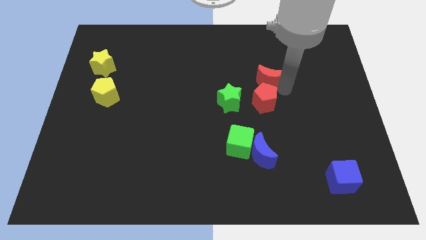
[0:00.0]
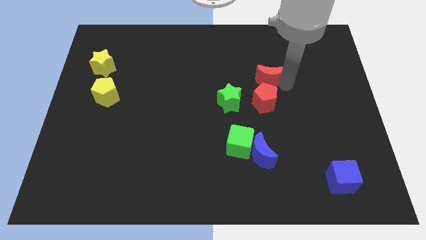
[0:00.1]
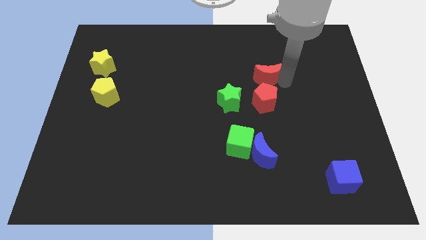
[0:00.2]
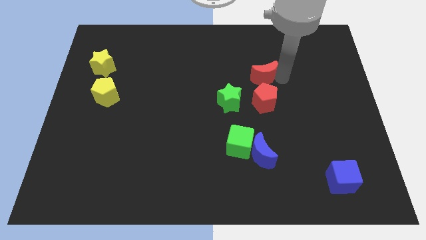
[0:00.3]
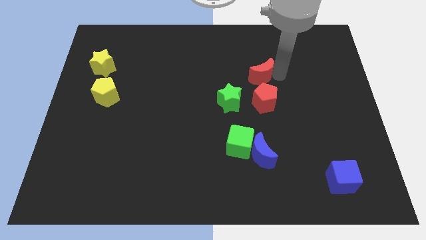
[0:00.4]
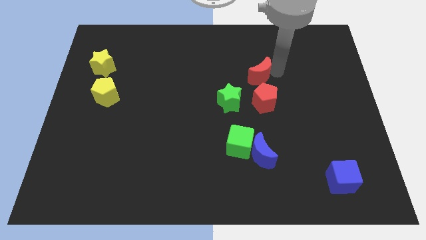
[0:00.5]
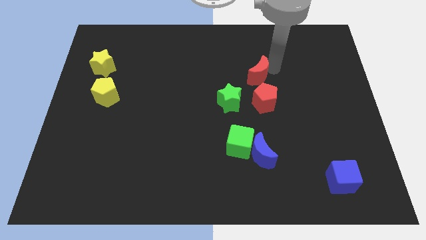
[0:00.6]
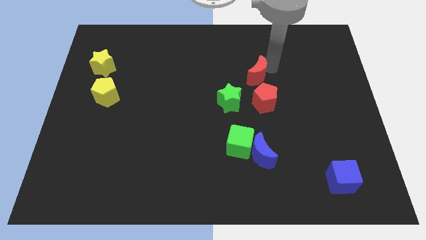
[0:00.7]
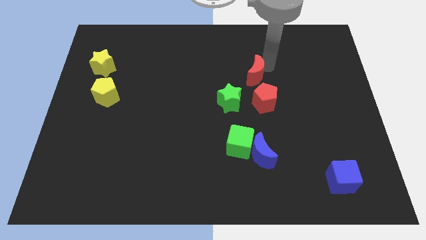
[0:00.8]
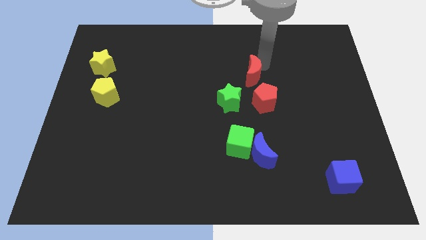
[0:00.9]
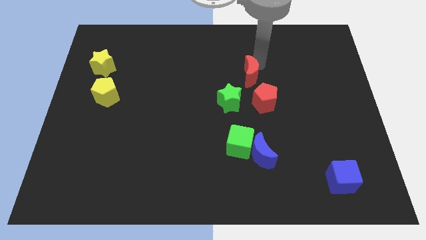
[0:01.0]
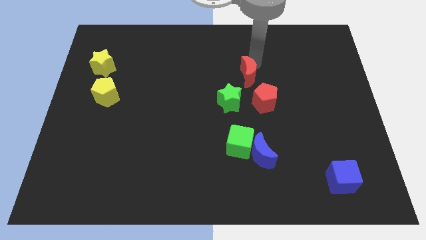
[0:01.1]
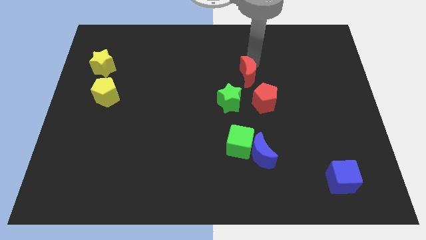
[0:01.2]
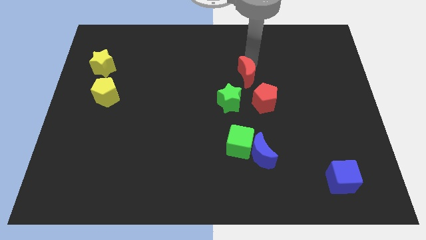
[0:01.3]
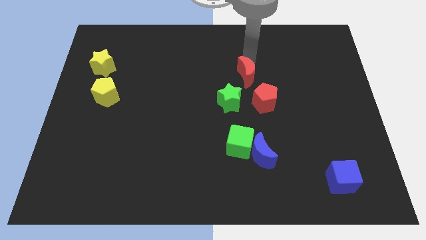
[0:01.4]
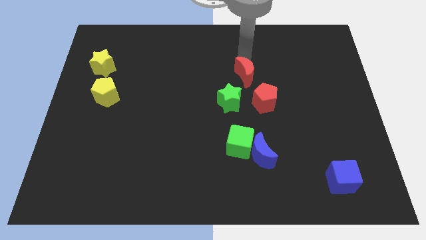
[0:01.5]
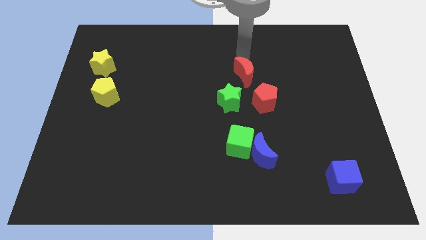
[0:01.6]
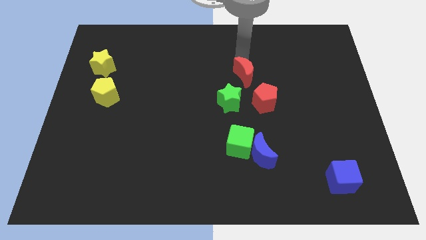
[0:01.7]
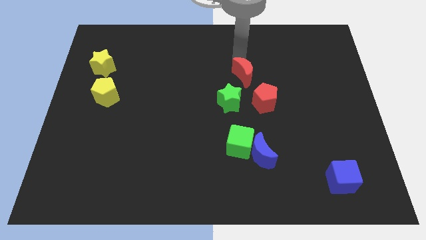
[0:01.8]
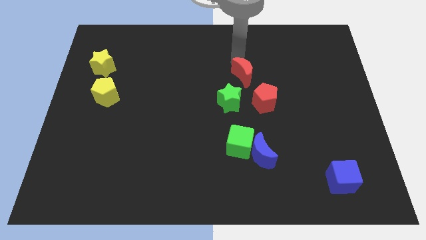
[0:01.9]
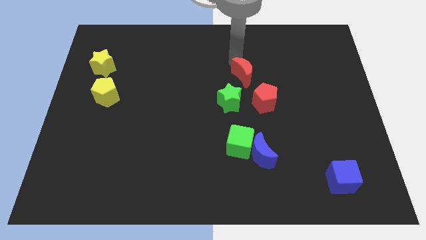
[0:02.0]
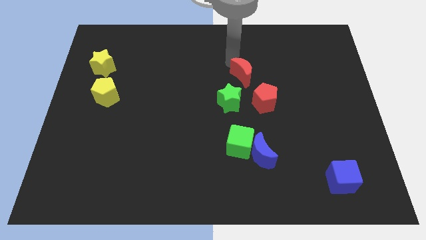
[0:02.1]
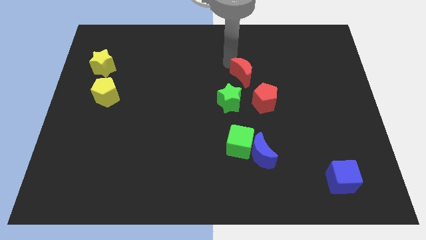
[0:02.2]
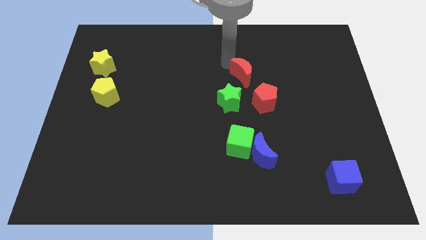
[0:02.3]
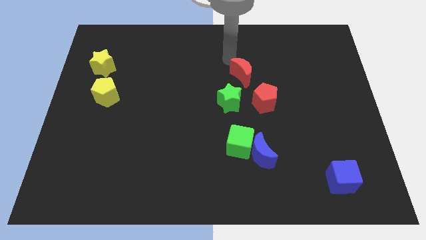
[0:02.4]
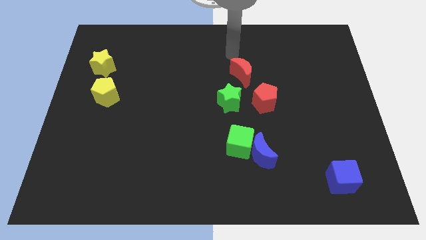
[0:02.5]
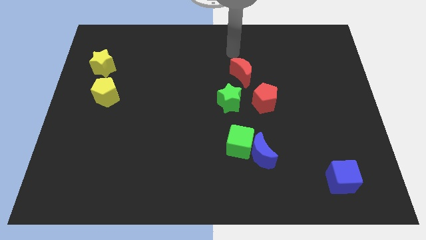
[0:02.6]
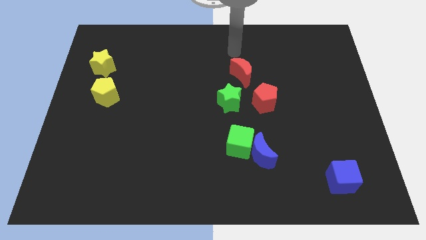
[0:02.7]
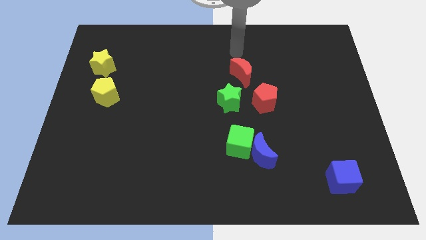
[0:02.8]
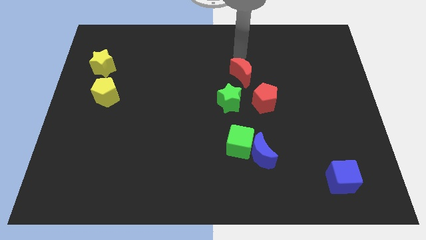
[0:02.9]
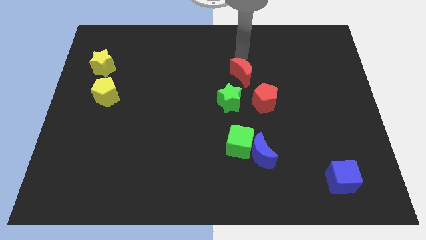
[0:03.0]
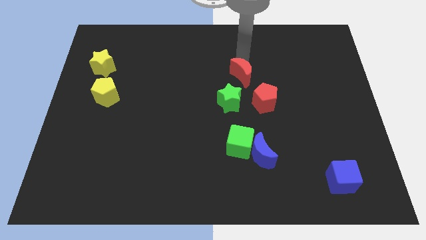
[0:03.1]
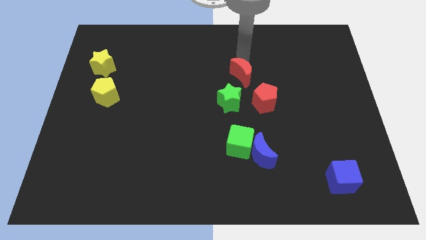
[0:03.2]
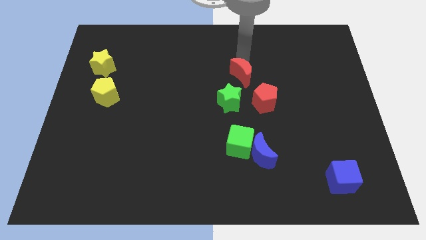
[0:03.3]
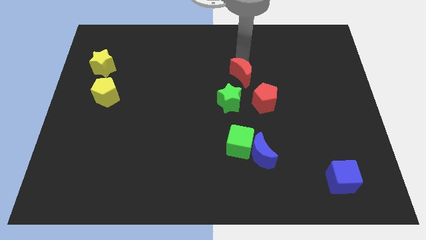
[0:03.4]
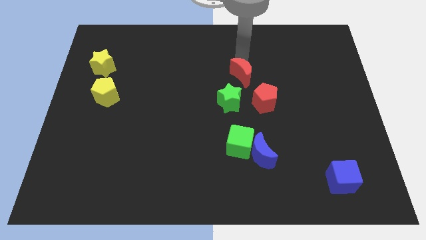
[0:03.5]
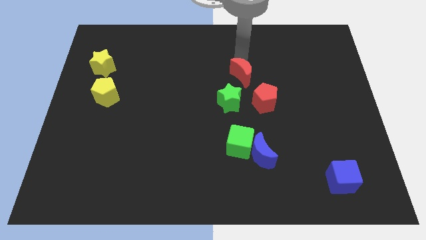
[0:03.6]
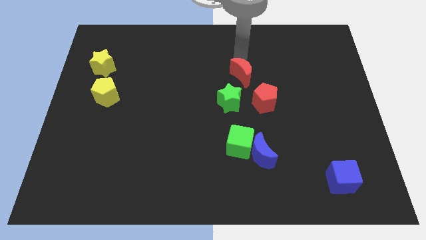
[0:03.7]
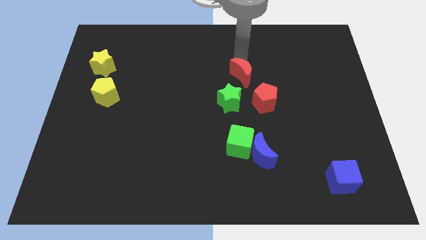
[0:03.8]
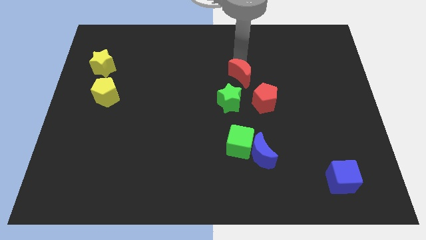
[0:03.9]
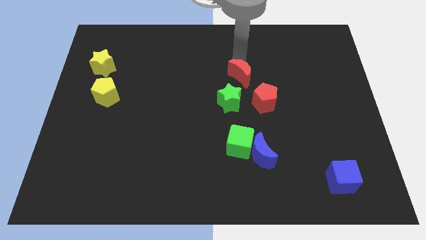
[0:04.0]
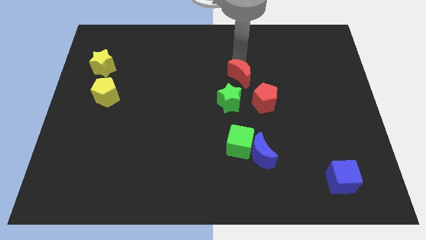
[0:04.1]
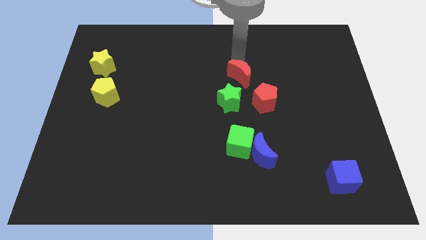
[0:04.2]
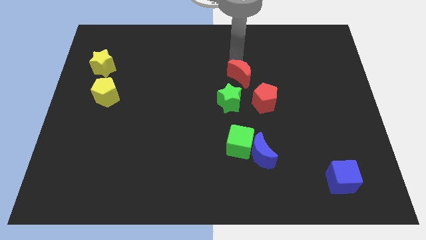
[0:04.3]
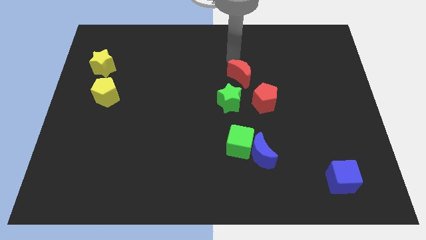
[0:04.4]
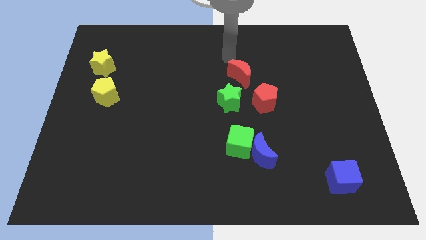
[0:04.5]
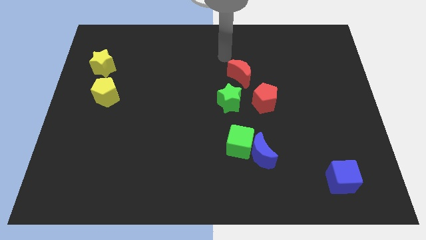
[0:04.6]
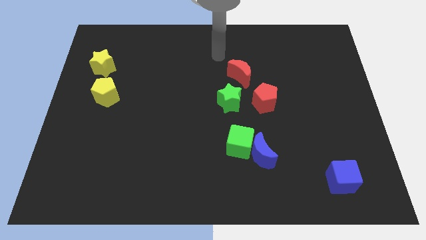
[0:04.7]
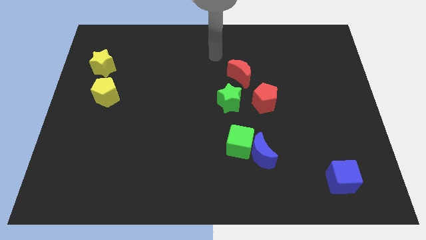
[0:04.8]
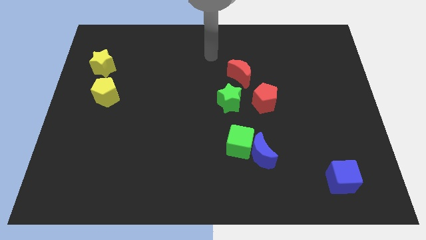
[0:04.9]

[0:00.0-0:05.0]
move the red crescent to the top of the green star

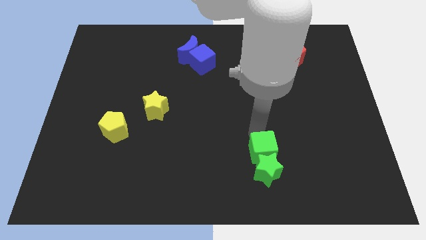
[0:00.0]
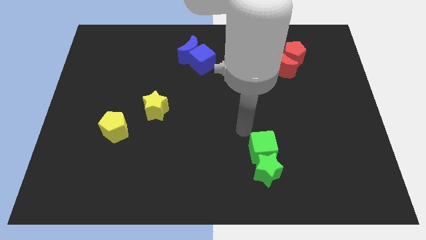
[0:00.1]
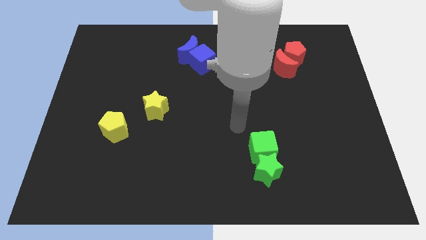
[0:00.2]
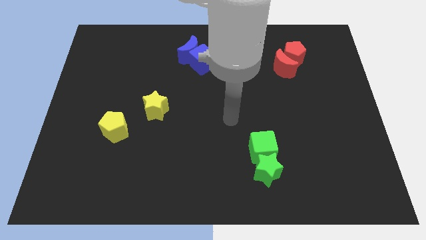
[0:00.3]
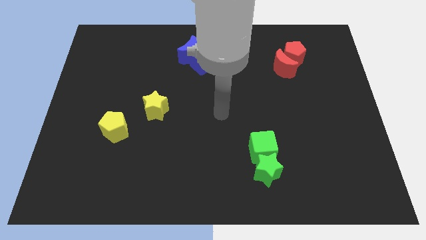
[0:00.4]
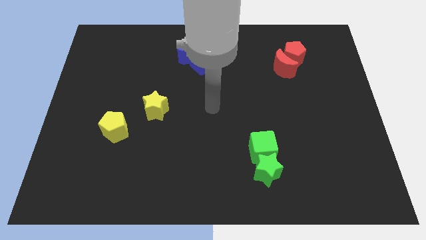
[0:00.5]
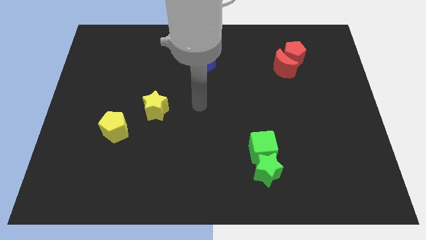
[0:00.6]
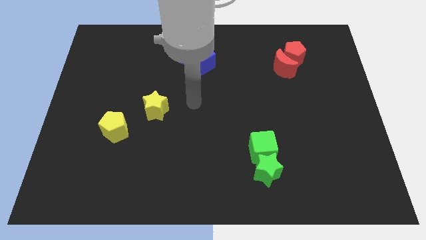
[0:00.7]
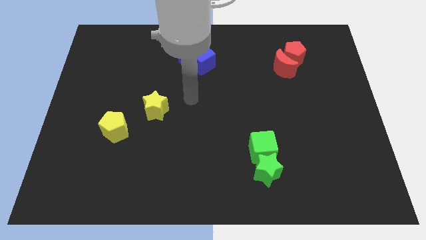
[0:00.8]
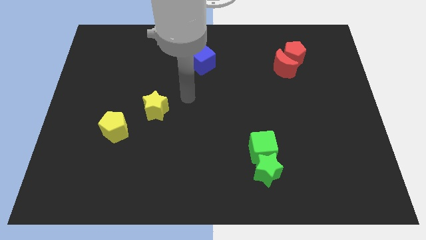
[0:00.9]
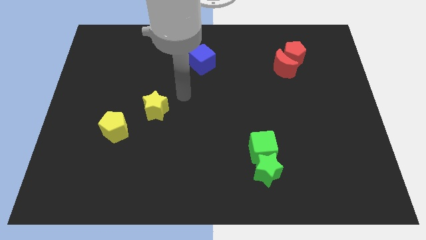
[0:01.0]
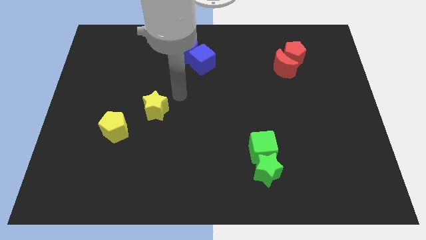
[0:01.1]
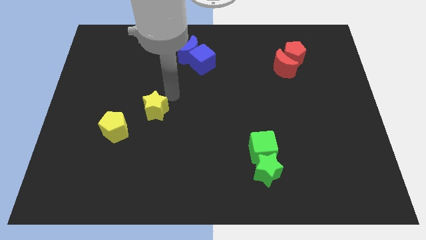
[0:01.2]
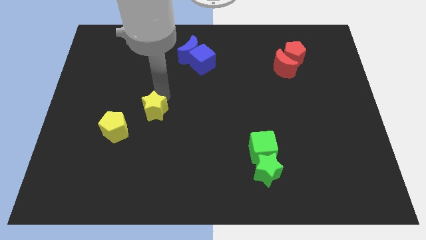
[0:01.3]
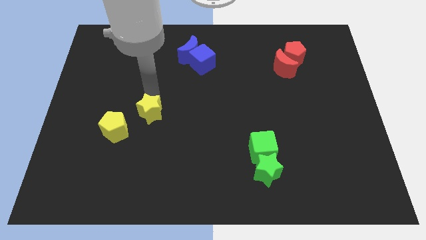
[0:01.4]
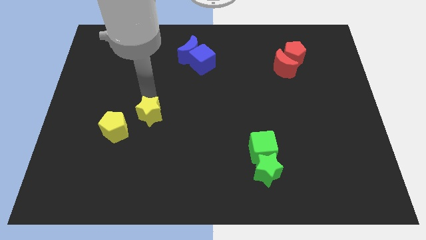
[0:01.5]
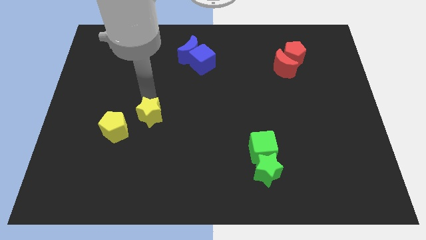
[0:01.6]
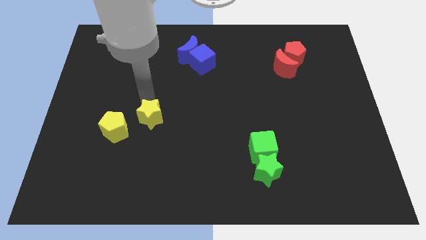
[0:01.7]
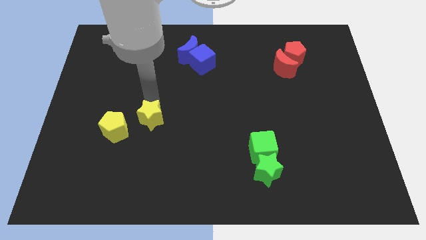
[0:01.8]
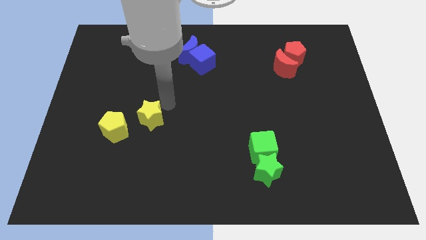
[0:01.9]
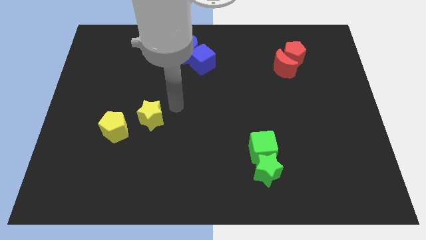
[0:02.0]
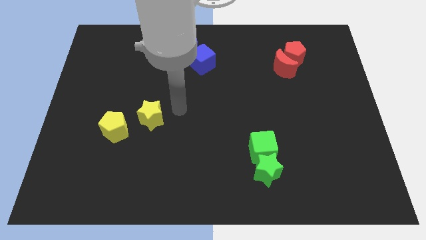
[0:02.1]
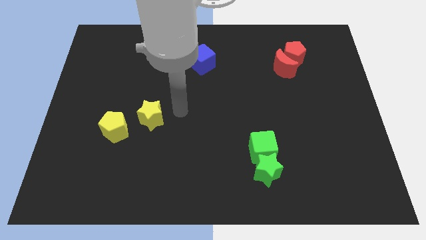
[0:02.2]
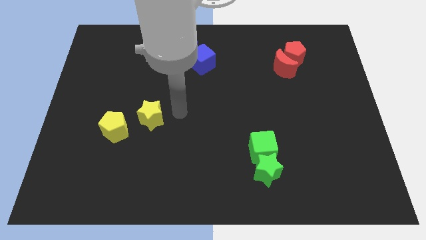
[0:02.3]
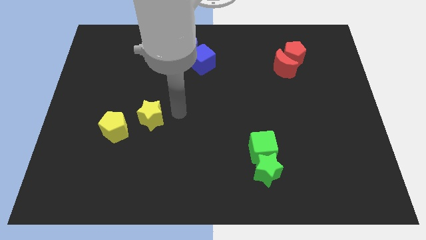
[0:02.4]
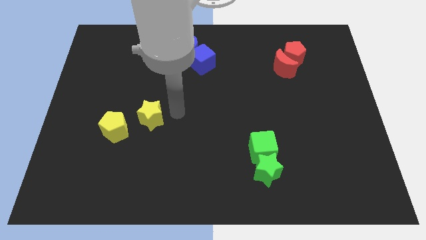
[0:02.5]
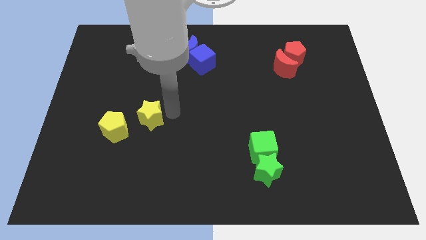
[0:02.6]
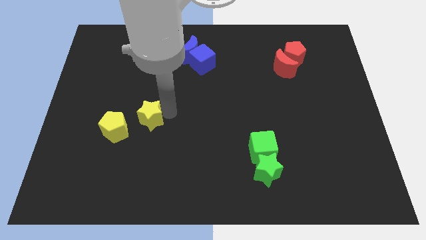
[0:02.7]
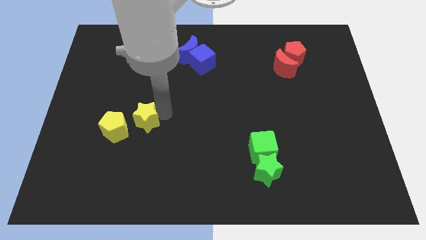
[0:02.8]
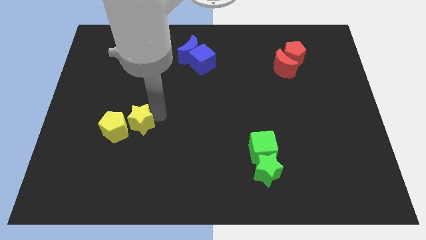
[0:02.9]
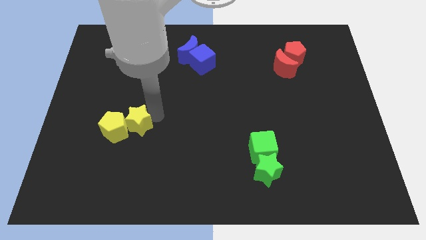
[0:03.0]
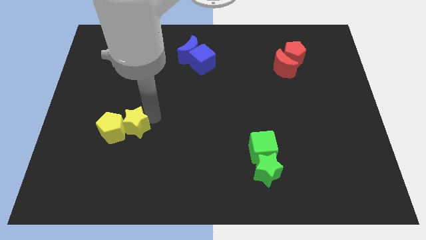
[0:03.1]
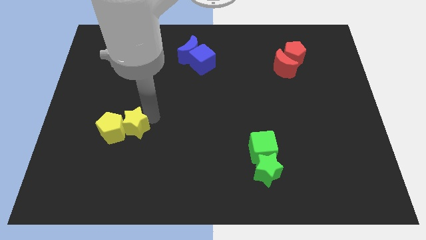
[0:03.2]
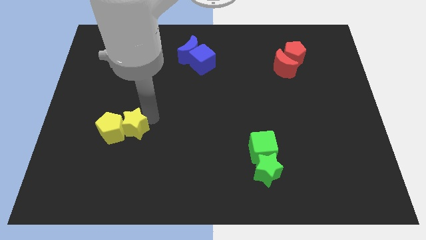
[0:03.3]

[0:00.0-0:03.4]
place the yellow star to the right side of yellow pentagon

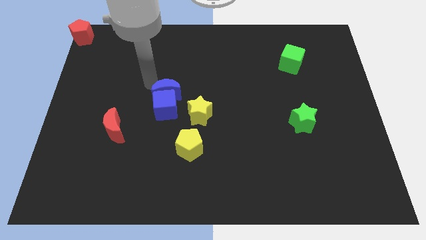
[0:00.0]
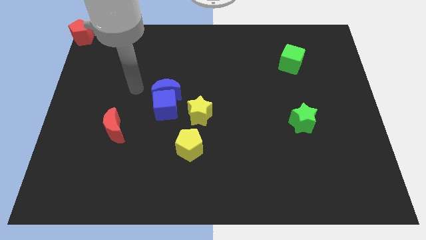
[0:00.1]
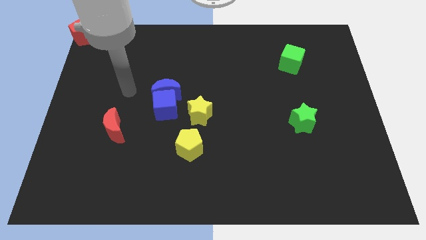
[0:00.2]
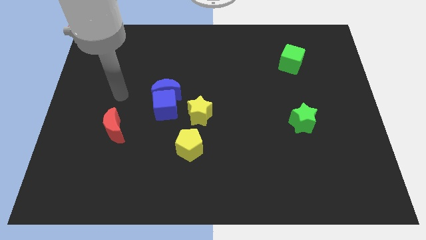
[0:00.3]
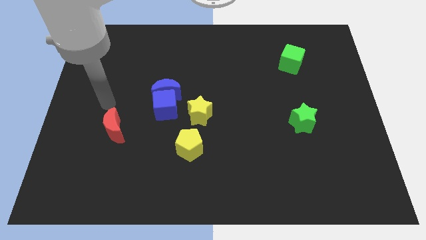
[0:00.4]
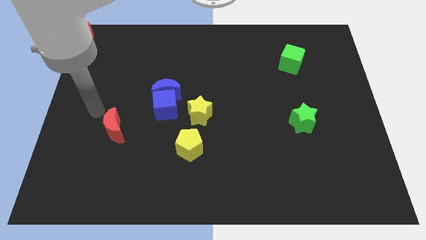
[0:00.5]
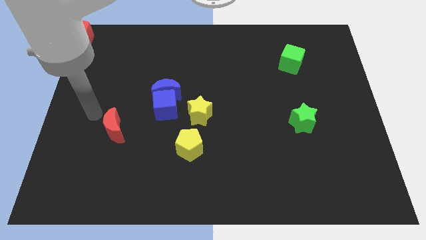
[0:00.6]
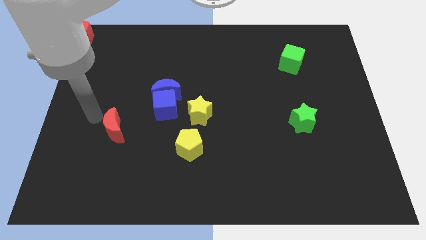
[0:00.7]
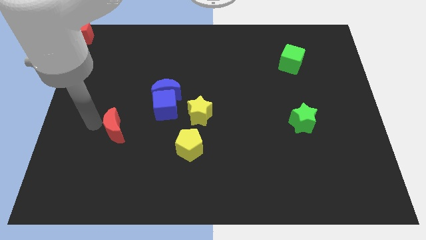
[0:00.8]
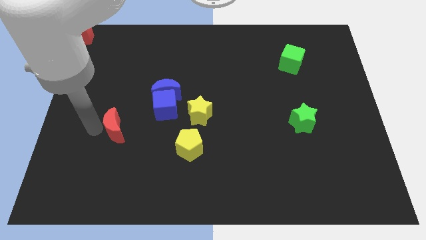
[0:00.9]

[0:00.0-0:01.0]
move the arm to the left of the red moon
